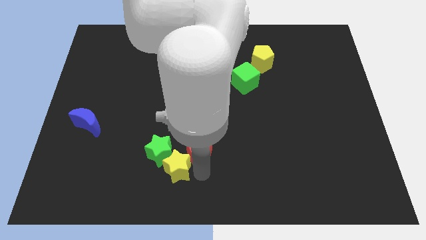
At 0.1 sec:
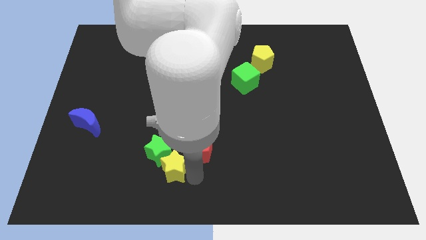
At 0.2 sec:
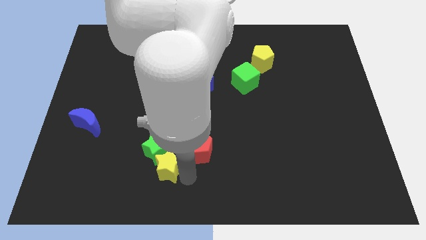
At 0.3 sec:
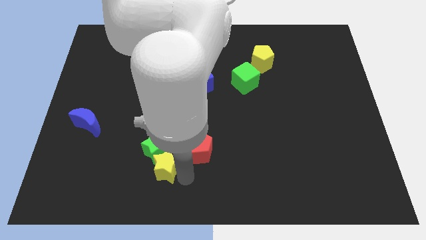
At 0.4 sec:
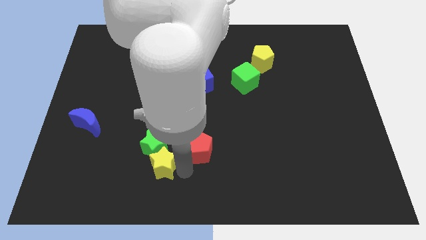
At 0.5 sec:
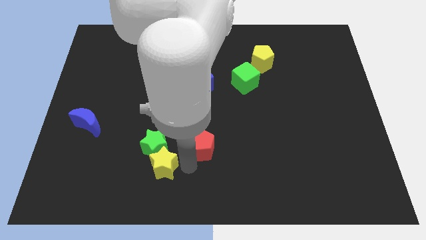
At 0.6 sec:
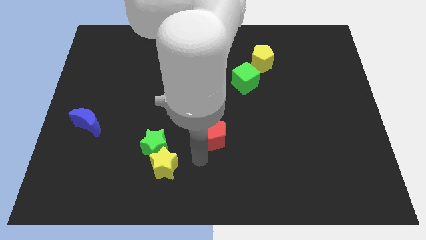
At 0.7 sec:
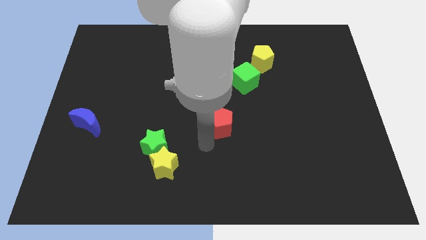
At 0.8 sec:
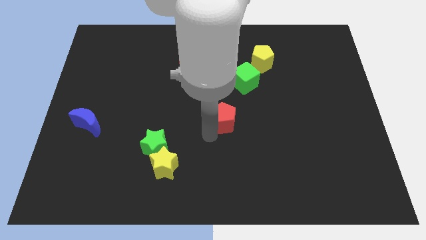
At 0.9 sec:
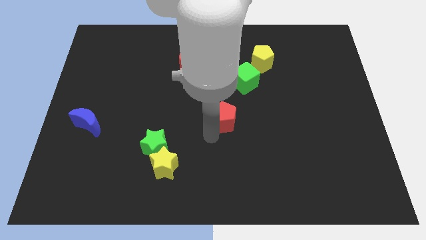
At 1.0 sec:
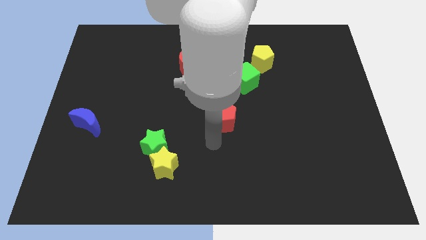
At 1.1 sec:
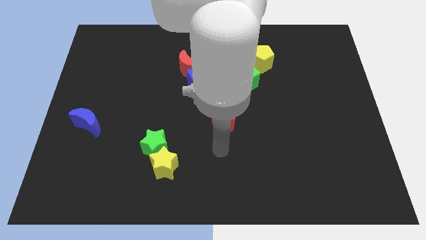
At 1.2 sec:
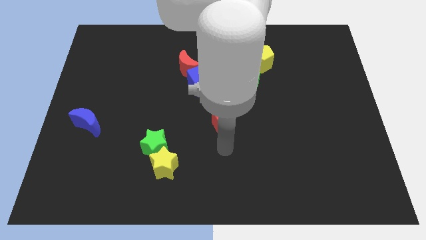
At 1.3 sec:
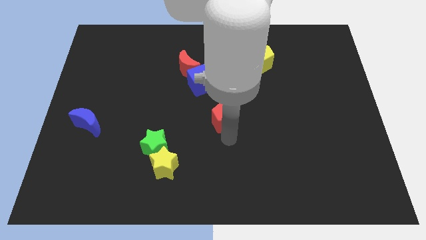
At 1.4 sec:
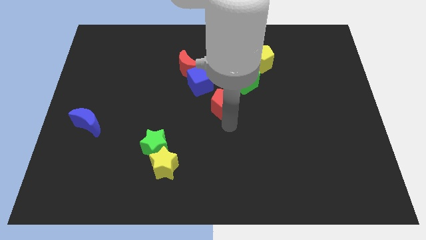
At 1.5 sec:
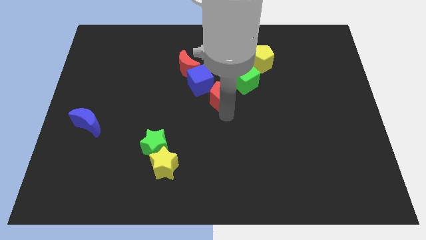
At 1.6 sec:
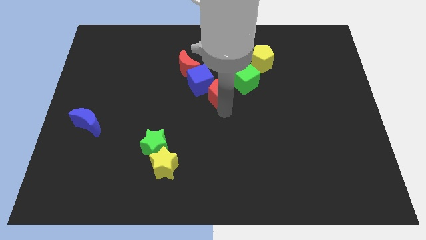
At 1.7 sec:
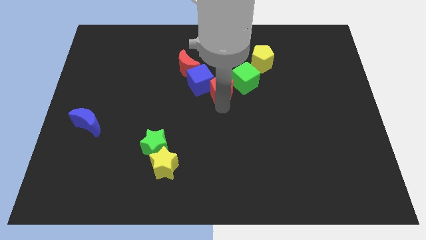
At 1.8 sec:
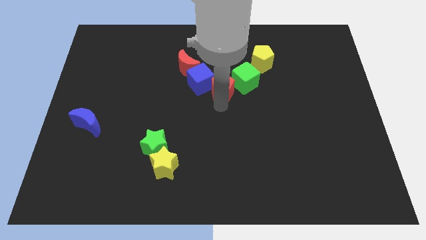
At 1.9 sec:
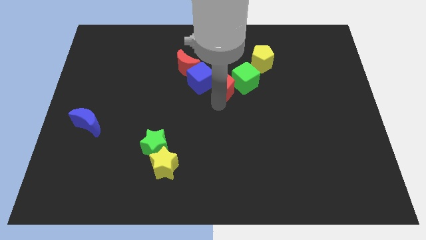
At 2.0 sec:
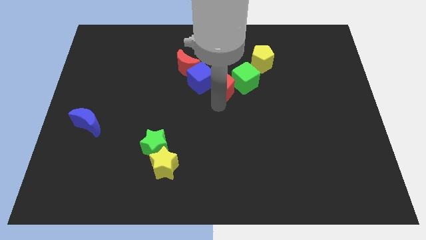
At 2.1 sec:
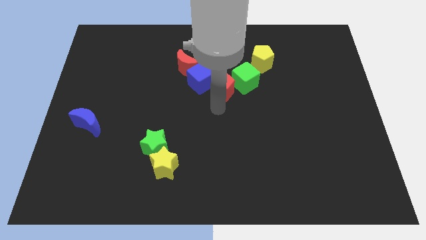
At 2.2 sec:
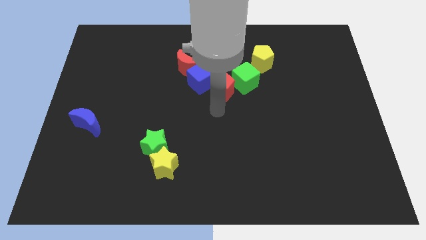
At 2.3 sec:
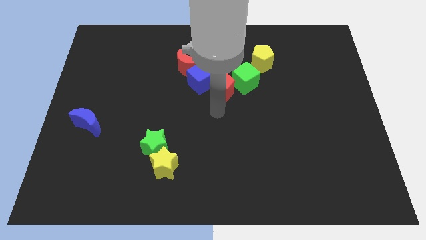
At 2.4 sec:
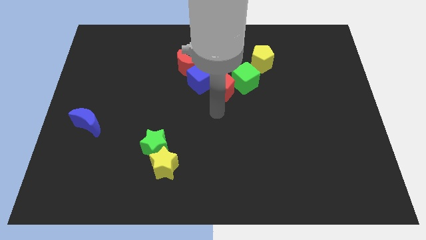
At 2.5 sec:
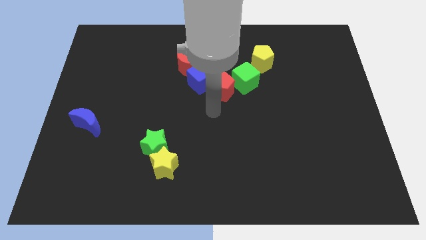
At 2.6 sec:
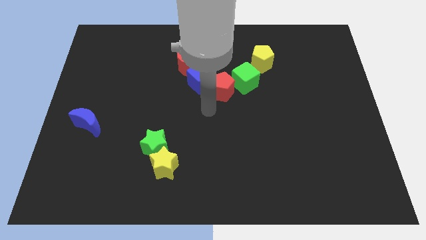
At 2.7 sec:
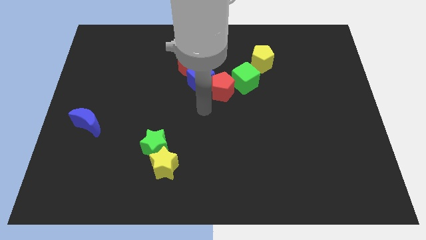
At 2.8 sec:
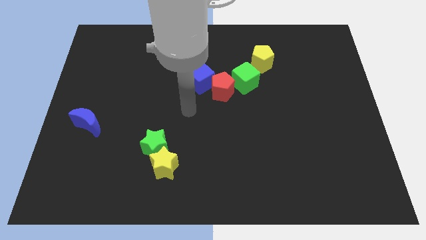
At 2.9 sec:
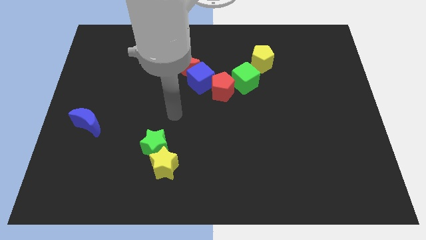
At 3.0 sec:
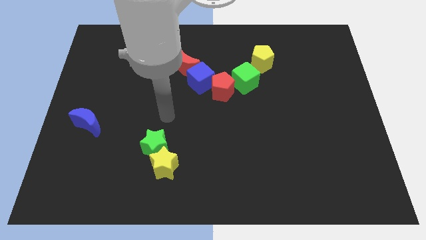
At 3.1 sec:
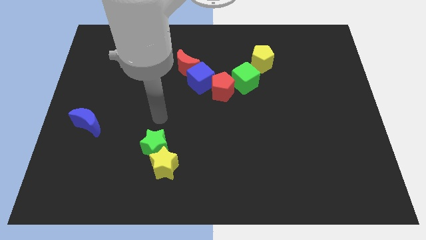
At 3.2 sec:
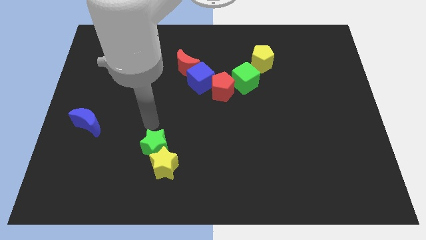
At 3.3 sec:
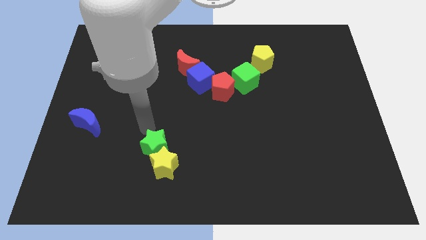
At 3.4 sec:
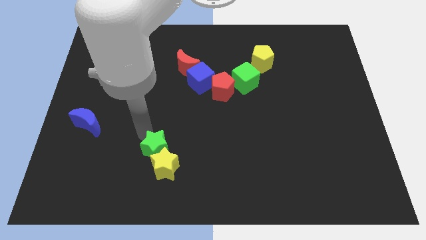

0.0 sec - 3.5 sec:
attach the red pentagon to the blue cube

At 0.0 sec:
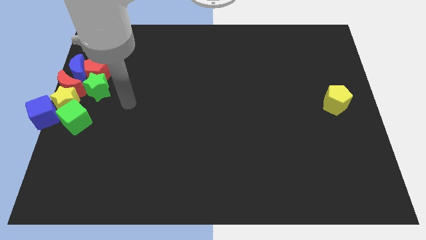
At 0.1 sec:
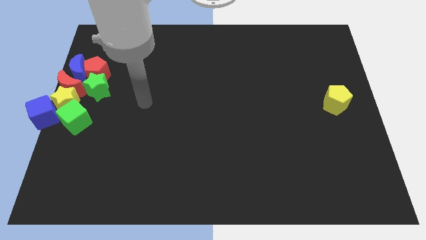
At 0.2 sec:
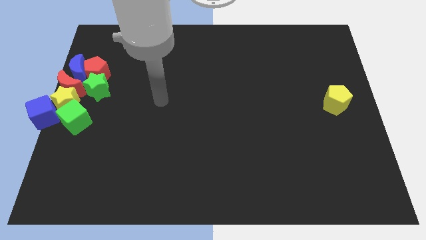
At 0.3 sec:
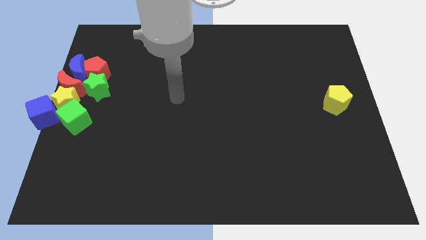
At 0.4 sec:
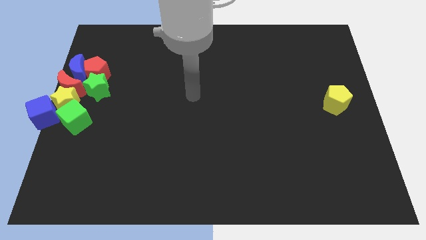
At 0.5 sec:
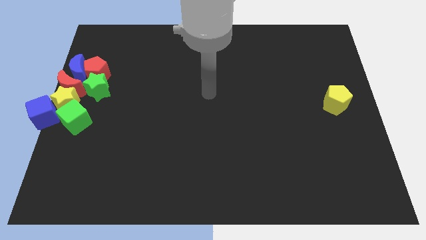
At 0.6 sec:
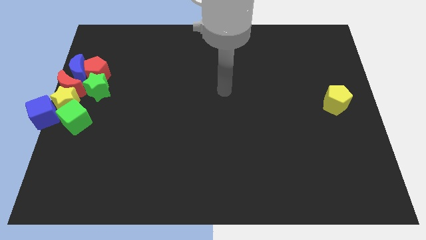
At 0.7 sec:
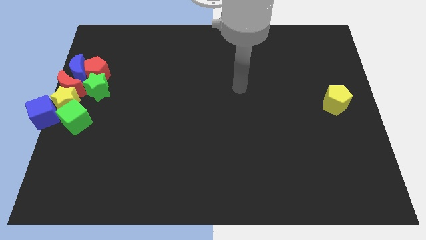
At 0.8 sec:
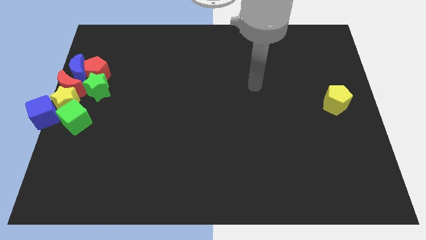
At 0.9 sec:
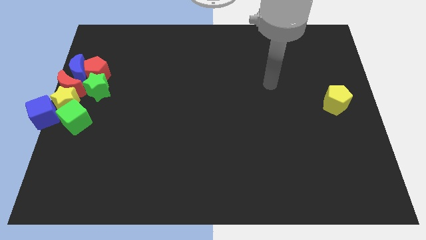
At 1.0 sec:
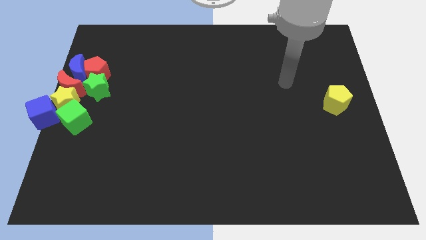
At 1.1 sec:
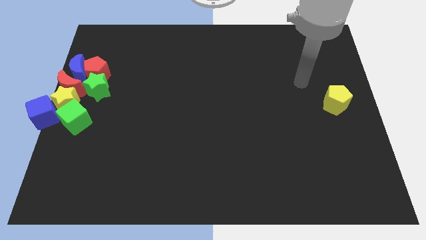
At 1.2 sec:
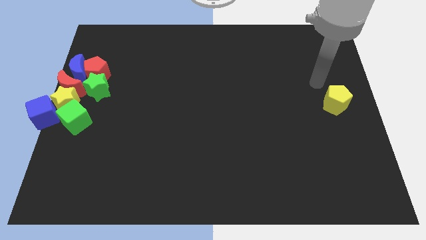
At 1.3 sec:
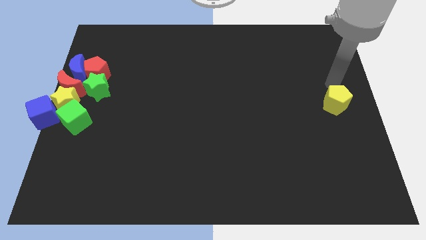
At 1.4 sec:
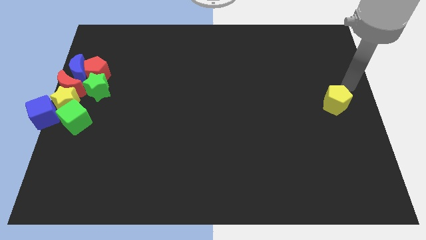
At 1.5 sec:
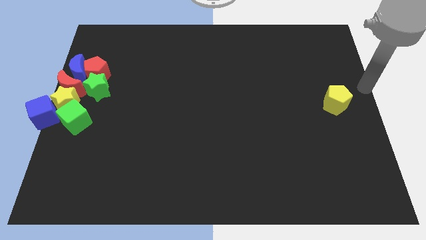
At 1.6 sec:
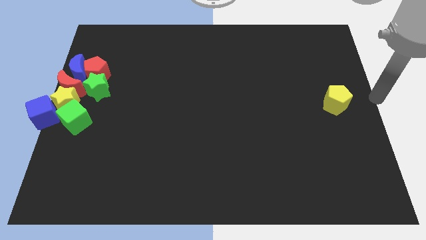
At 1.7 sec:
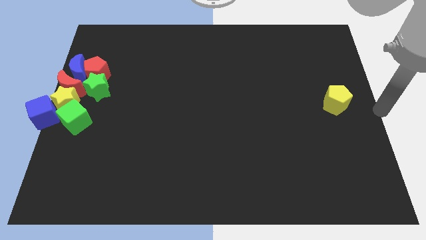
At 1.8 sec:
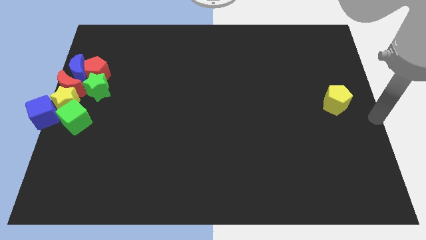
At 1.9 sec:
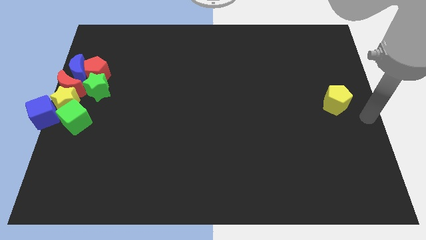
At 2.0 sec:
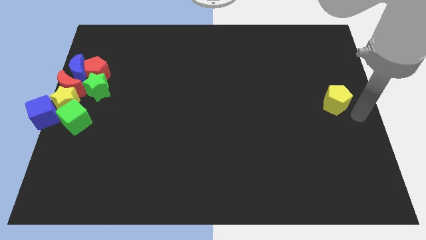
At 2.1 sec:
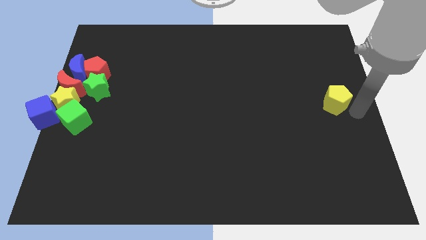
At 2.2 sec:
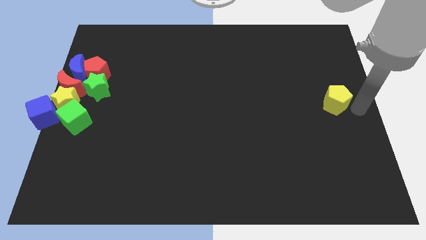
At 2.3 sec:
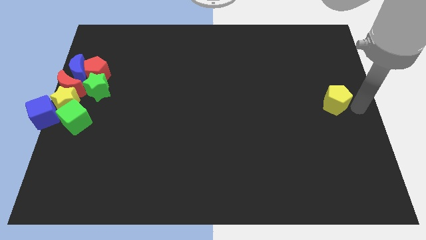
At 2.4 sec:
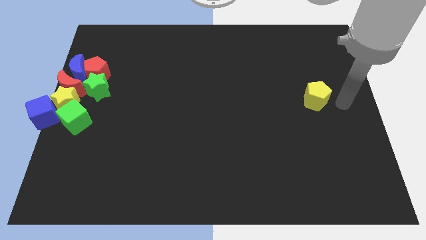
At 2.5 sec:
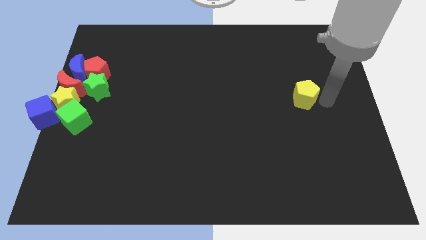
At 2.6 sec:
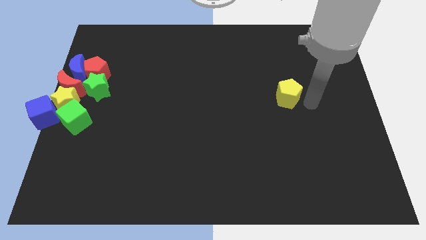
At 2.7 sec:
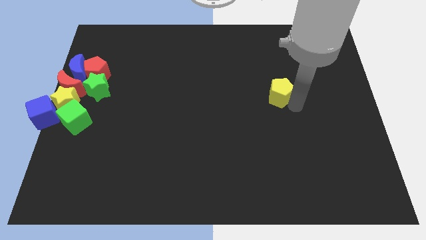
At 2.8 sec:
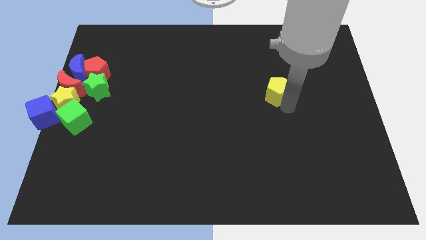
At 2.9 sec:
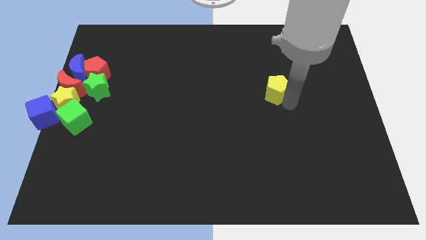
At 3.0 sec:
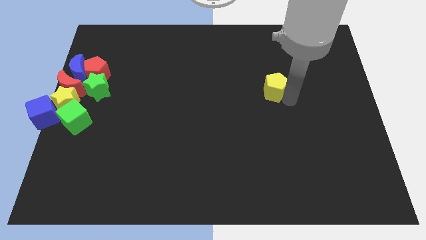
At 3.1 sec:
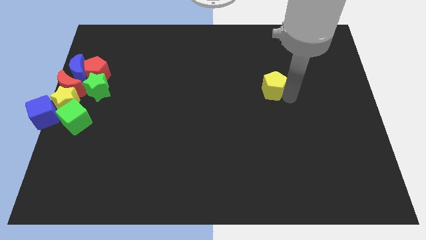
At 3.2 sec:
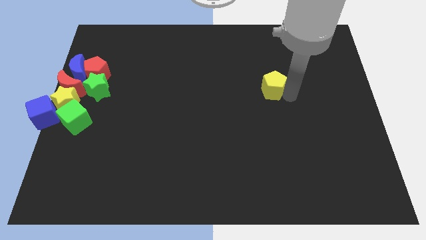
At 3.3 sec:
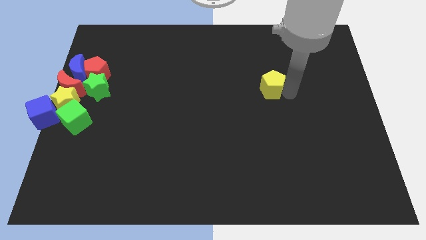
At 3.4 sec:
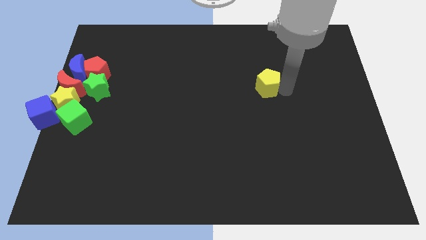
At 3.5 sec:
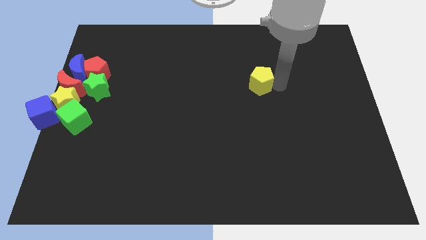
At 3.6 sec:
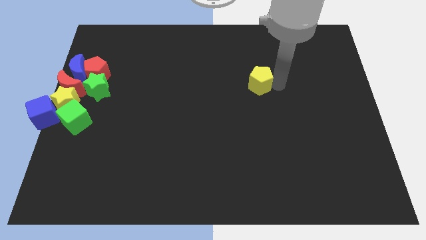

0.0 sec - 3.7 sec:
push the yellow pentagon towards the group of blocks

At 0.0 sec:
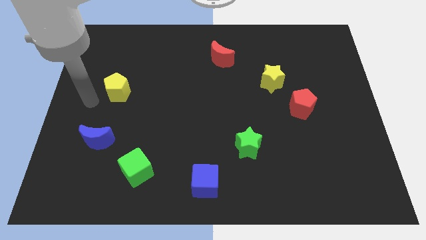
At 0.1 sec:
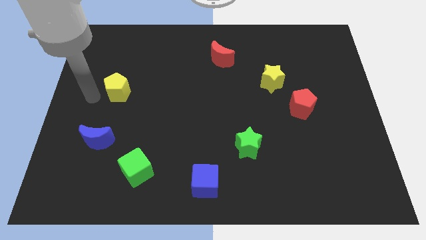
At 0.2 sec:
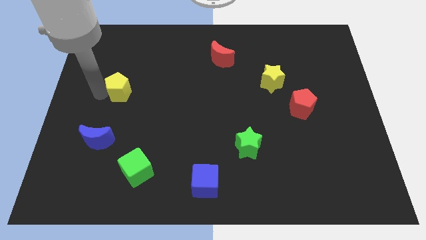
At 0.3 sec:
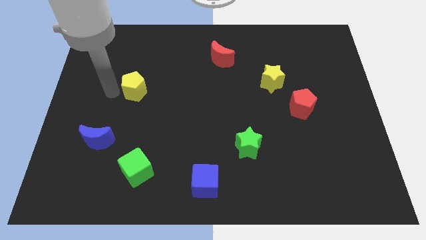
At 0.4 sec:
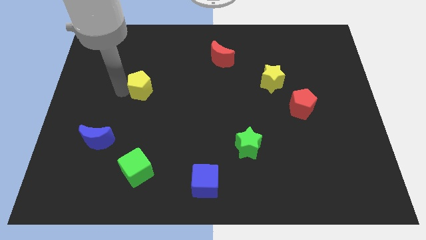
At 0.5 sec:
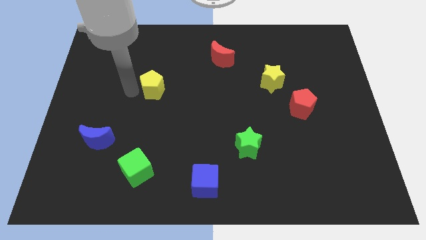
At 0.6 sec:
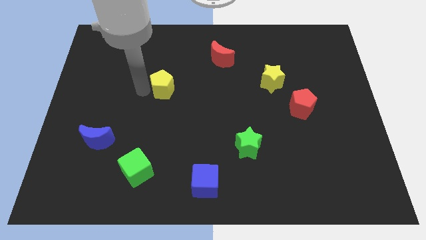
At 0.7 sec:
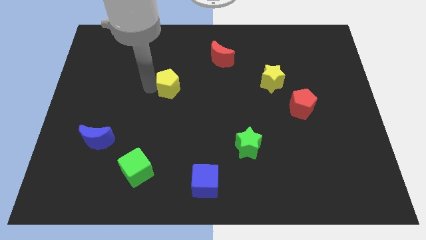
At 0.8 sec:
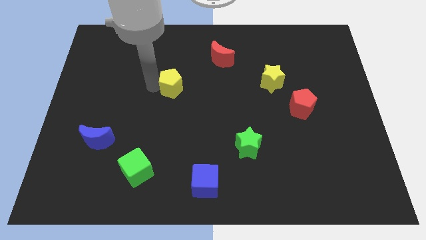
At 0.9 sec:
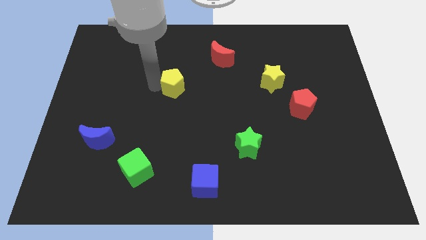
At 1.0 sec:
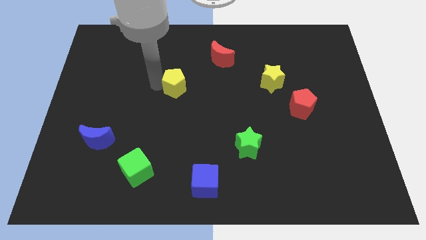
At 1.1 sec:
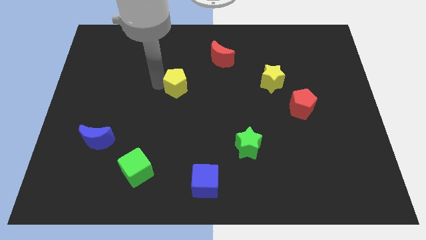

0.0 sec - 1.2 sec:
push the yellow pentagon towards the right

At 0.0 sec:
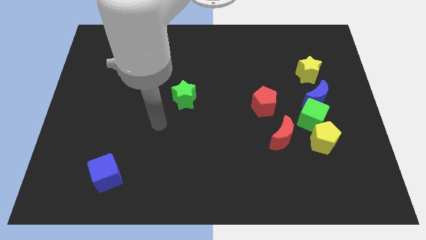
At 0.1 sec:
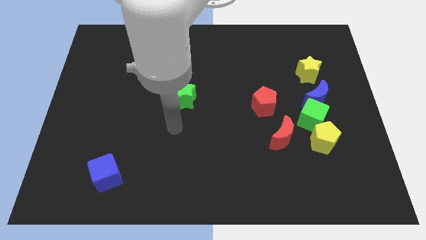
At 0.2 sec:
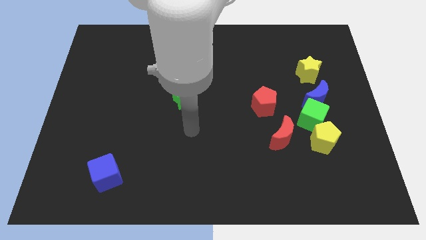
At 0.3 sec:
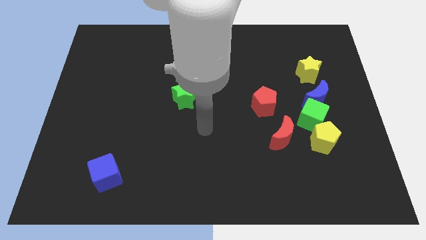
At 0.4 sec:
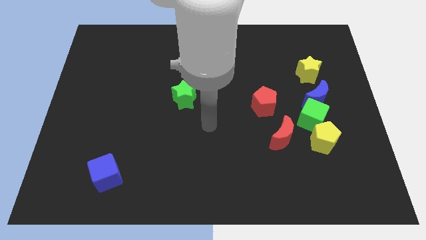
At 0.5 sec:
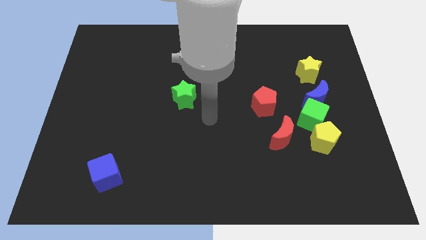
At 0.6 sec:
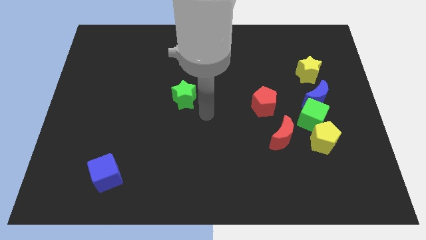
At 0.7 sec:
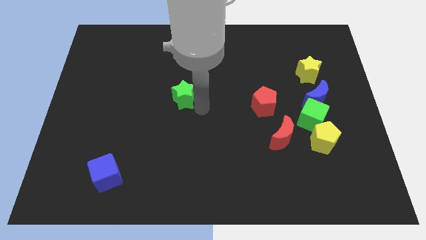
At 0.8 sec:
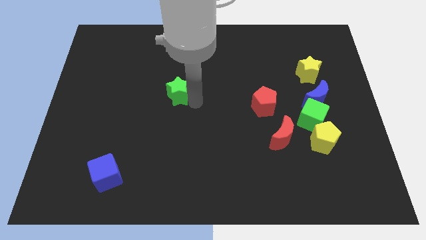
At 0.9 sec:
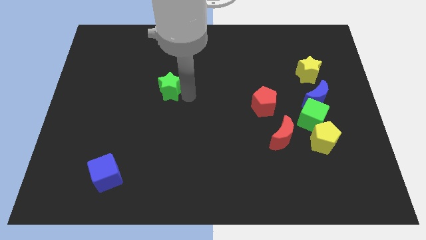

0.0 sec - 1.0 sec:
touch the bottom of green star
